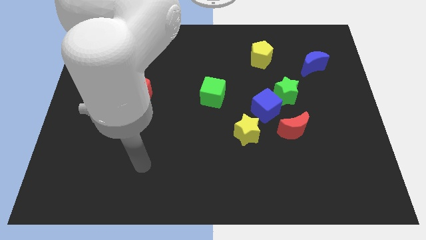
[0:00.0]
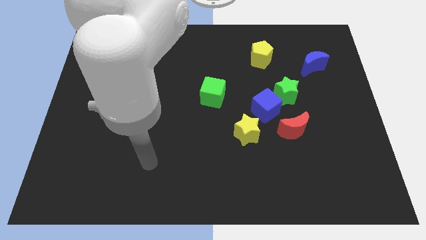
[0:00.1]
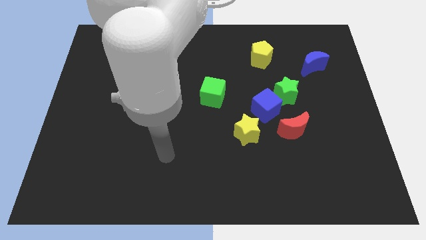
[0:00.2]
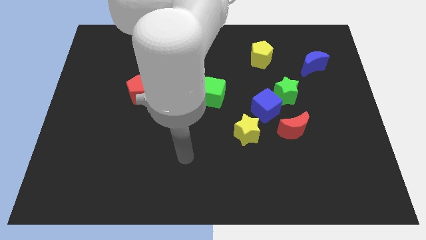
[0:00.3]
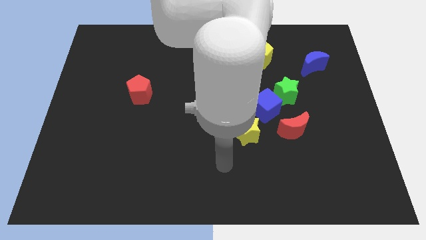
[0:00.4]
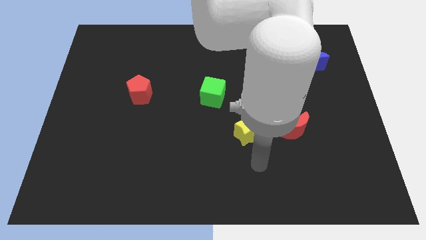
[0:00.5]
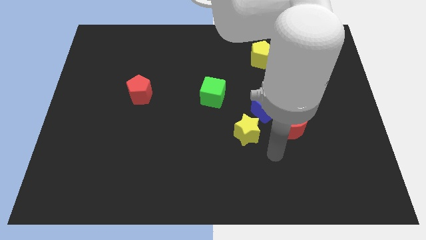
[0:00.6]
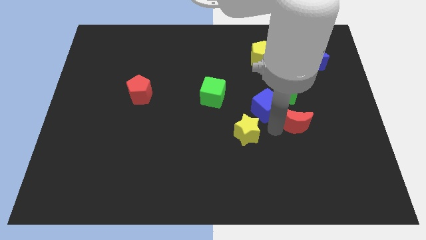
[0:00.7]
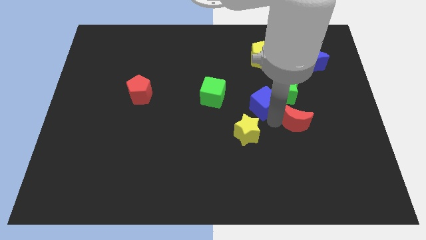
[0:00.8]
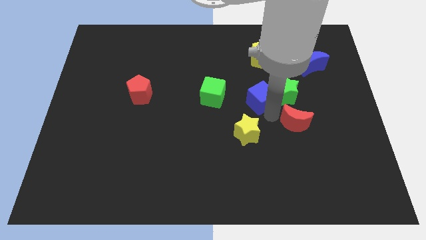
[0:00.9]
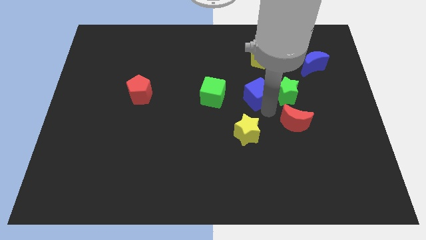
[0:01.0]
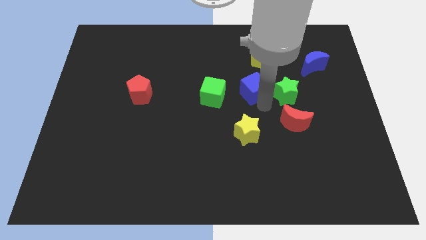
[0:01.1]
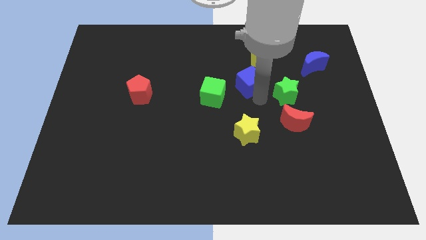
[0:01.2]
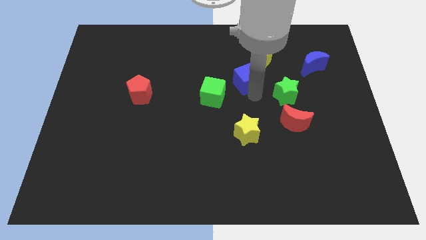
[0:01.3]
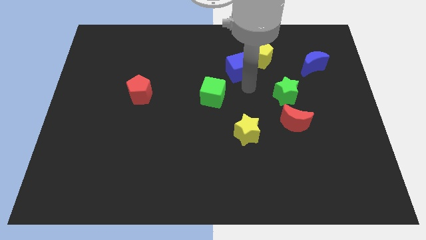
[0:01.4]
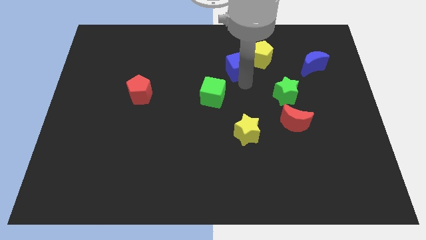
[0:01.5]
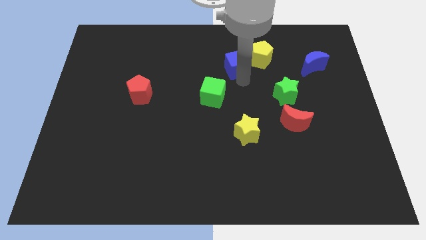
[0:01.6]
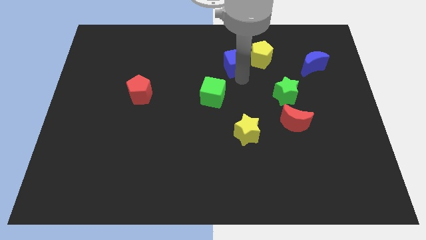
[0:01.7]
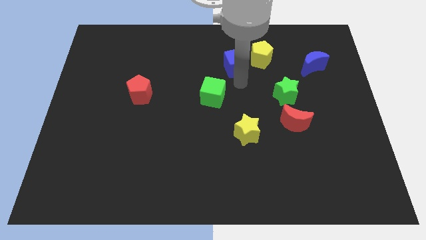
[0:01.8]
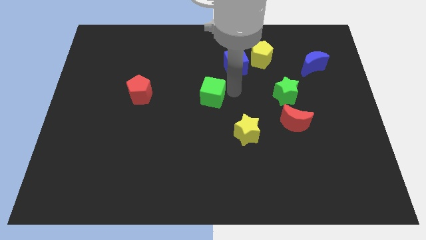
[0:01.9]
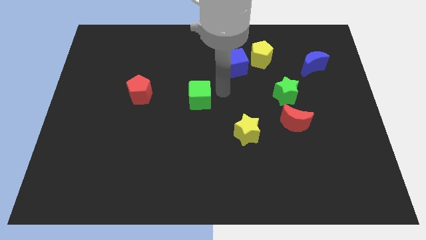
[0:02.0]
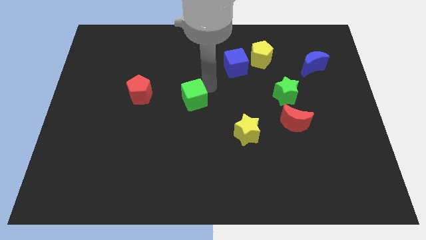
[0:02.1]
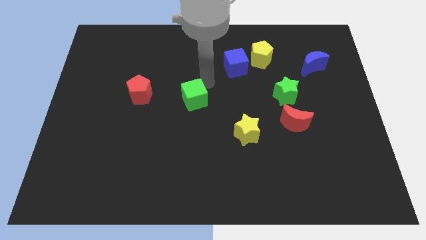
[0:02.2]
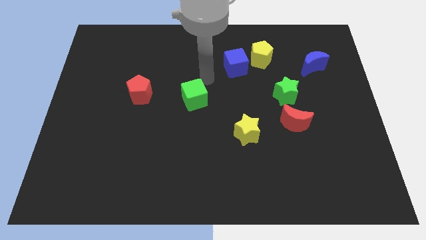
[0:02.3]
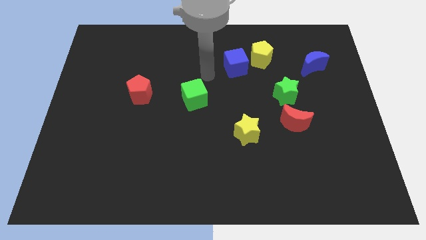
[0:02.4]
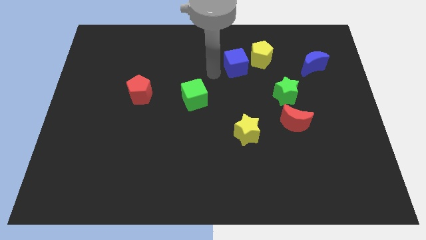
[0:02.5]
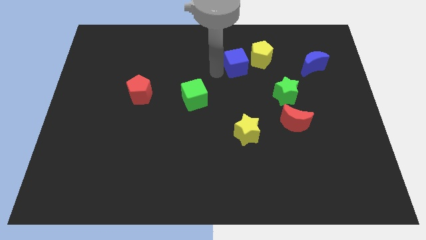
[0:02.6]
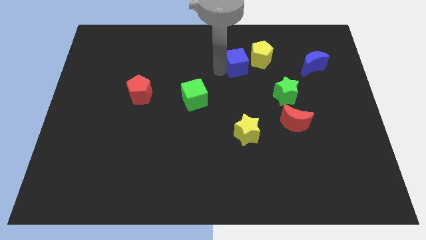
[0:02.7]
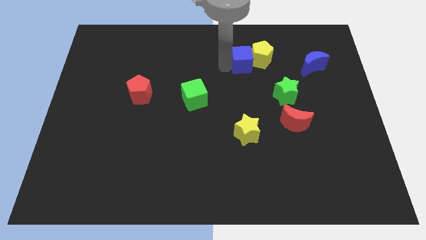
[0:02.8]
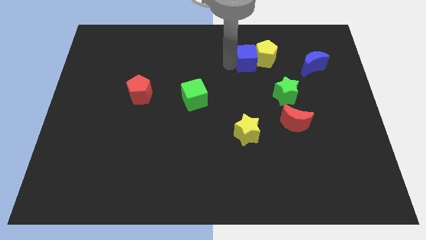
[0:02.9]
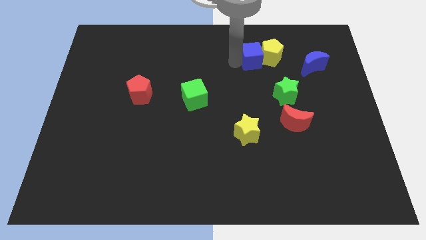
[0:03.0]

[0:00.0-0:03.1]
move the blue cube towards the yellow pentagon

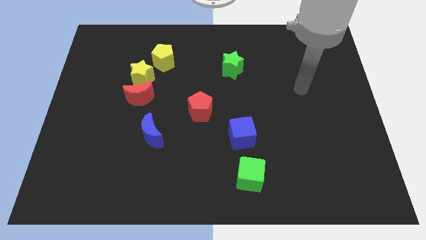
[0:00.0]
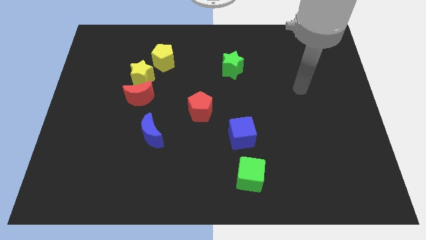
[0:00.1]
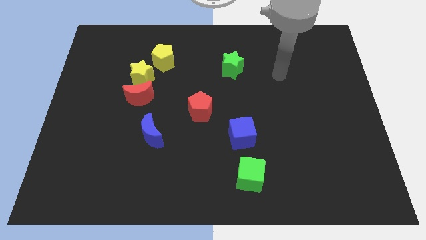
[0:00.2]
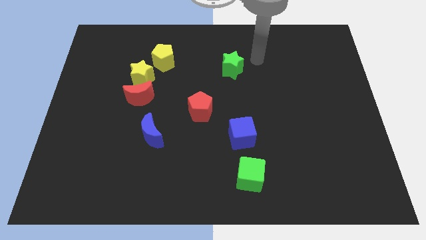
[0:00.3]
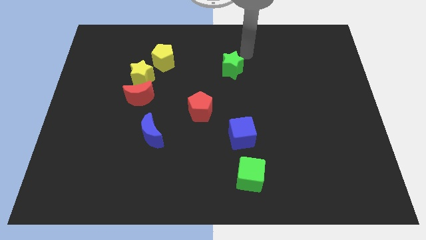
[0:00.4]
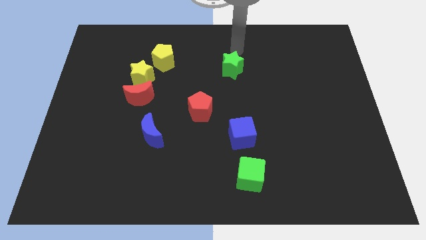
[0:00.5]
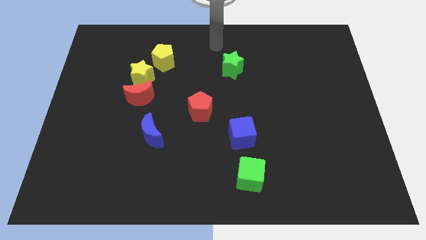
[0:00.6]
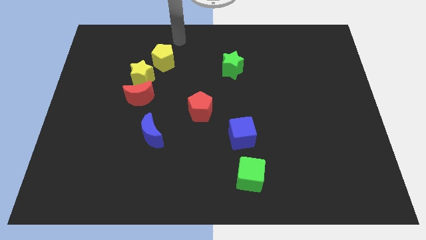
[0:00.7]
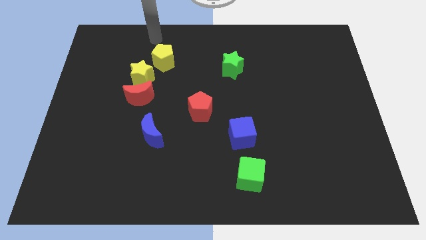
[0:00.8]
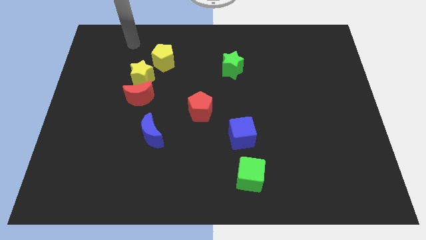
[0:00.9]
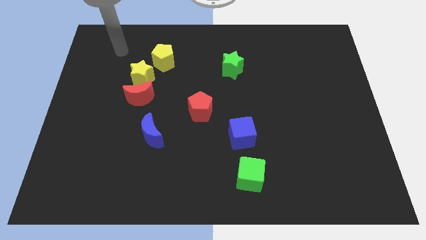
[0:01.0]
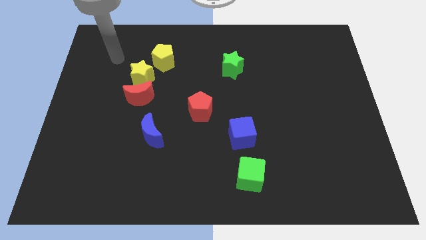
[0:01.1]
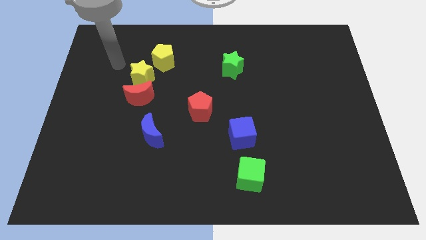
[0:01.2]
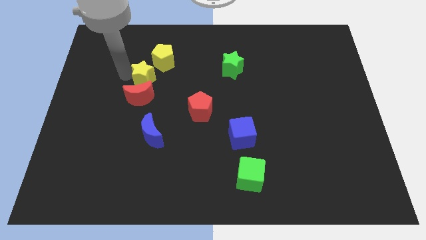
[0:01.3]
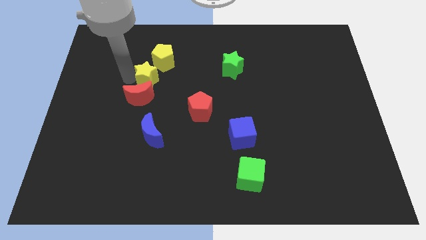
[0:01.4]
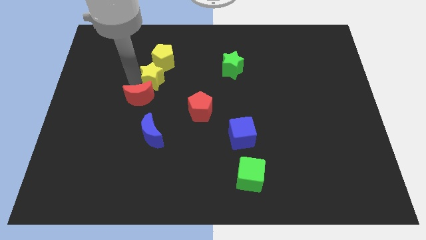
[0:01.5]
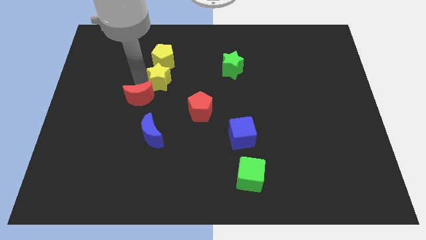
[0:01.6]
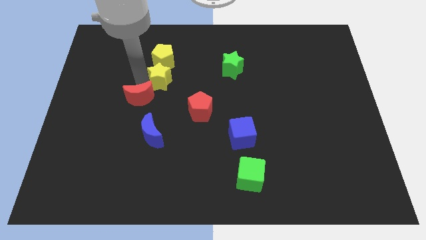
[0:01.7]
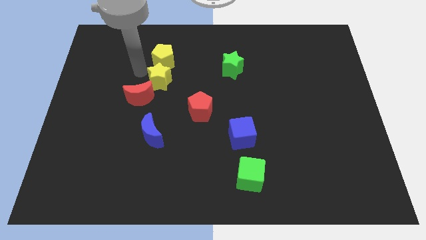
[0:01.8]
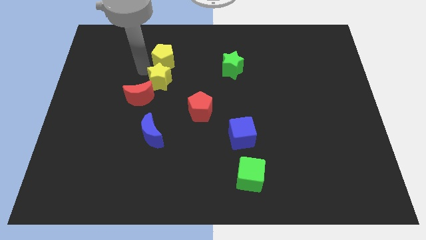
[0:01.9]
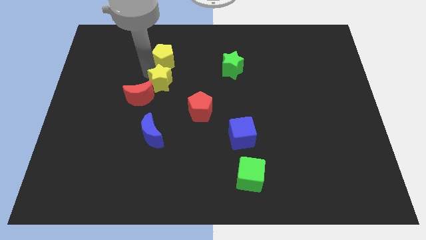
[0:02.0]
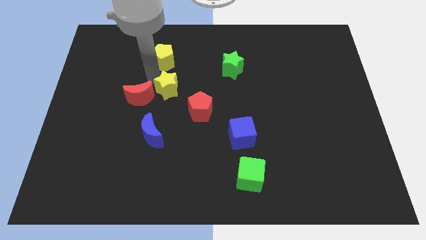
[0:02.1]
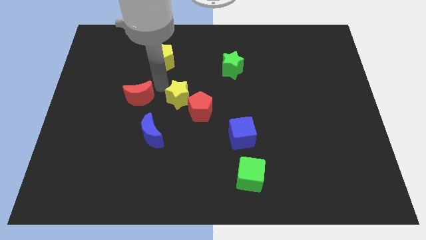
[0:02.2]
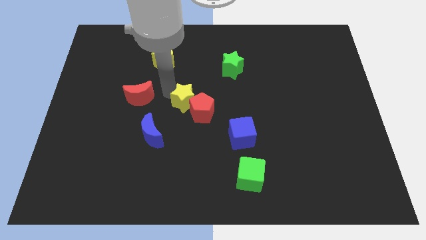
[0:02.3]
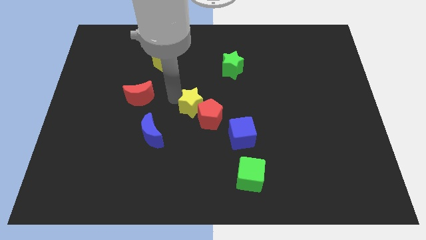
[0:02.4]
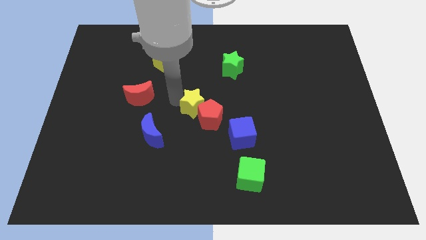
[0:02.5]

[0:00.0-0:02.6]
slide the yellow star towards the red pentagon

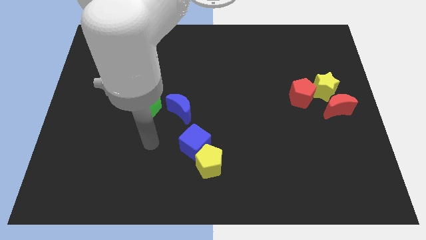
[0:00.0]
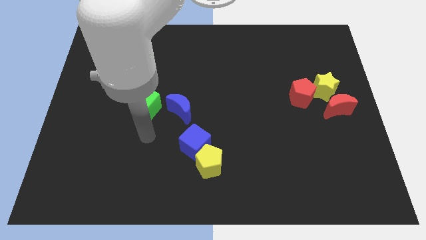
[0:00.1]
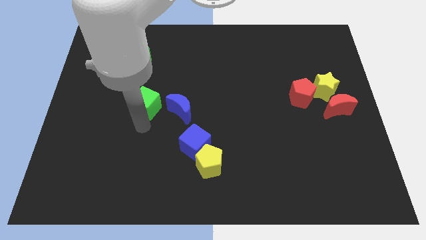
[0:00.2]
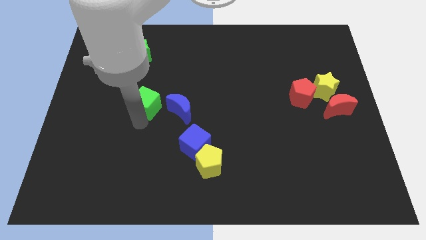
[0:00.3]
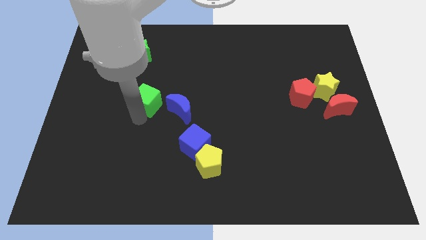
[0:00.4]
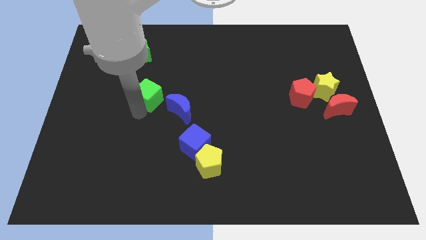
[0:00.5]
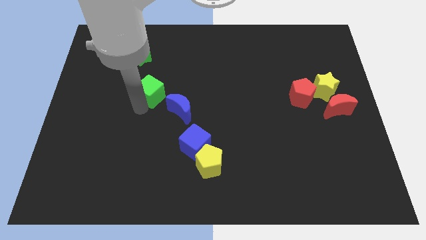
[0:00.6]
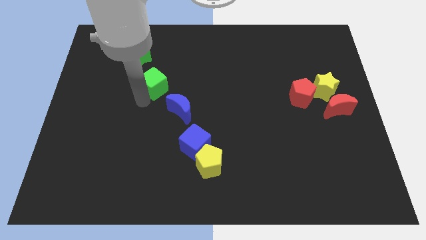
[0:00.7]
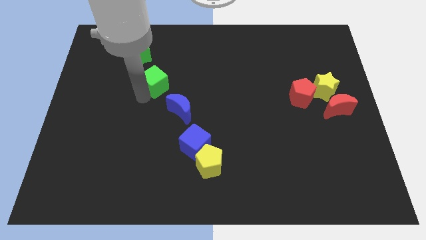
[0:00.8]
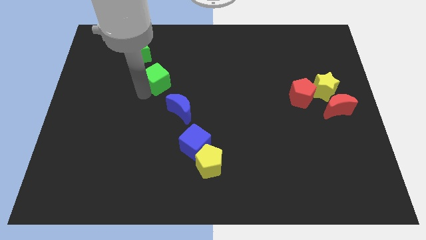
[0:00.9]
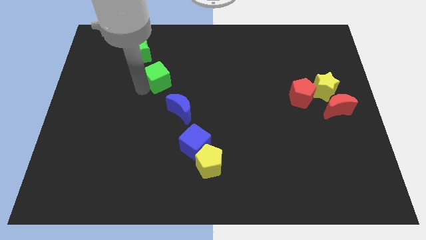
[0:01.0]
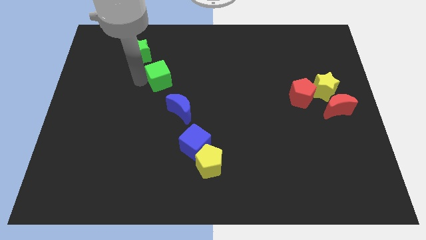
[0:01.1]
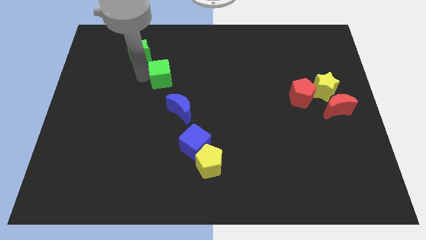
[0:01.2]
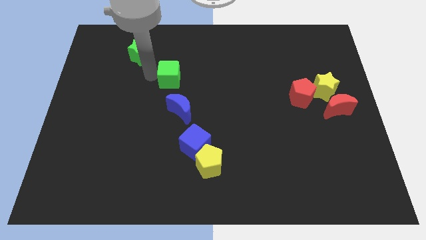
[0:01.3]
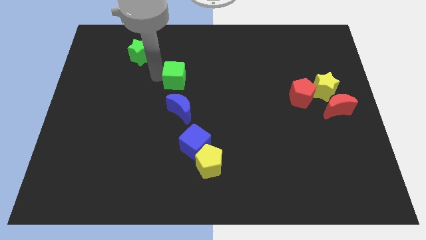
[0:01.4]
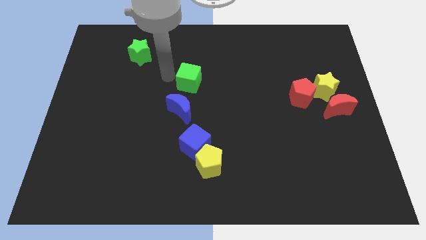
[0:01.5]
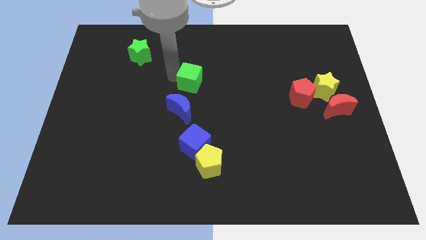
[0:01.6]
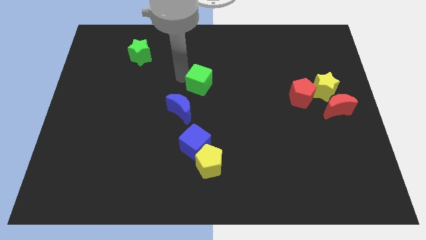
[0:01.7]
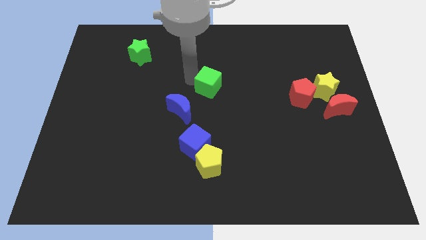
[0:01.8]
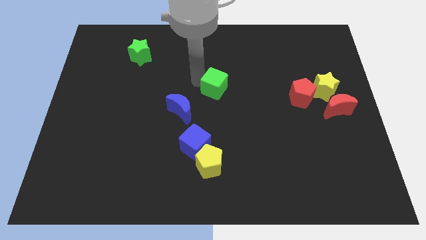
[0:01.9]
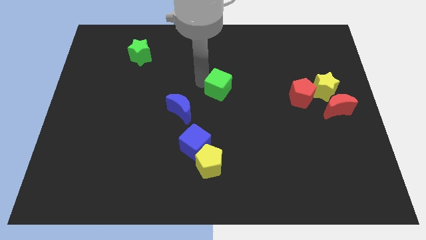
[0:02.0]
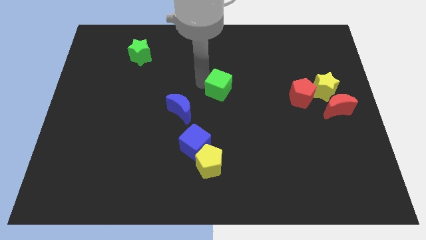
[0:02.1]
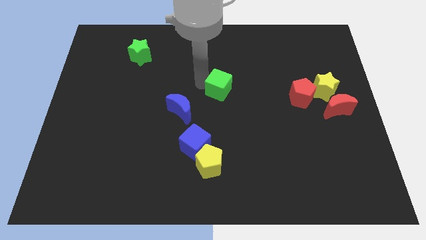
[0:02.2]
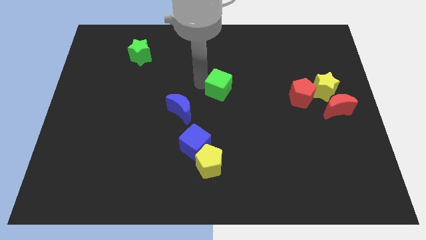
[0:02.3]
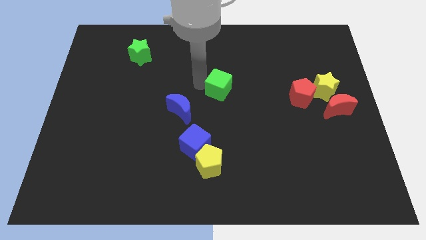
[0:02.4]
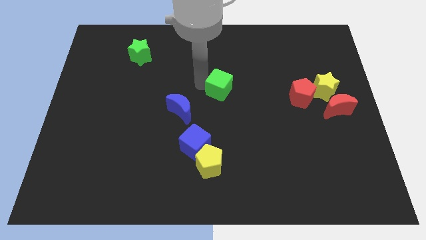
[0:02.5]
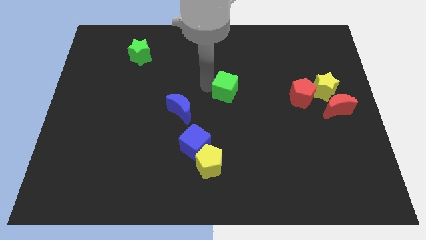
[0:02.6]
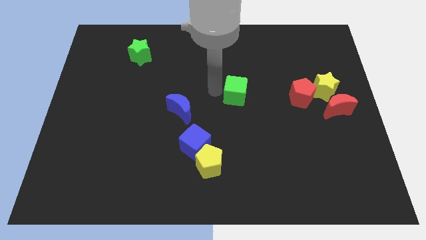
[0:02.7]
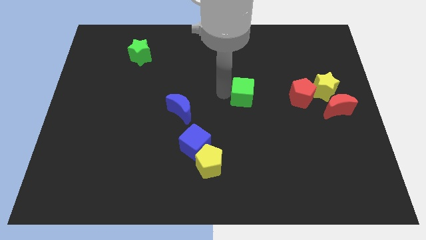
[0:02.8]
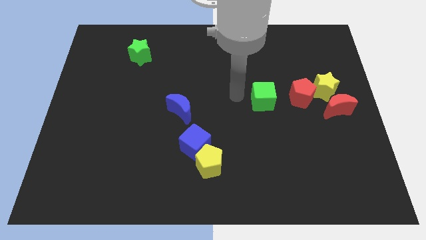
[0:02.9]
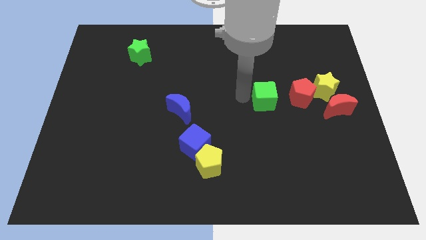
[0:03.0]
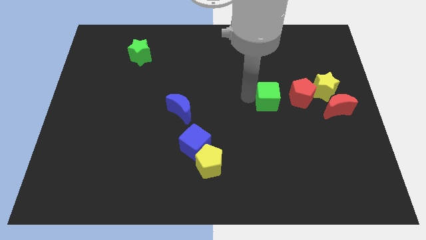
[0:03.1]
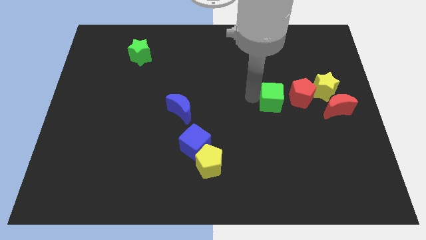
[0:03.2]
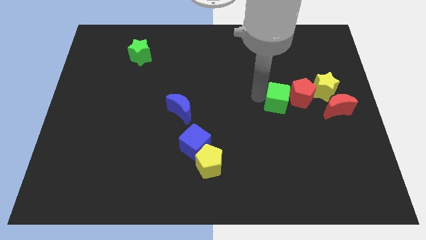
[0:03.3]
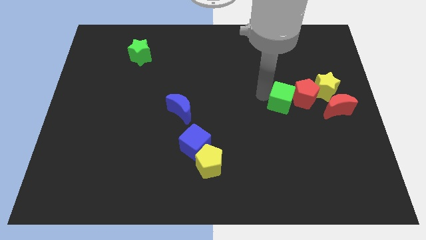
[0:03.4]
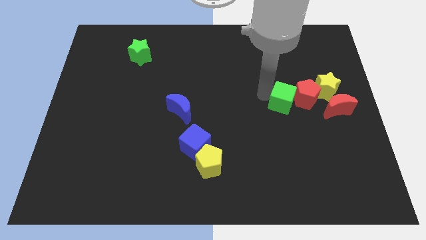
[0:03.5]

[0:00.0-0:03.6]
move the green cube close to the red pentagon
